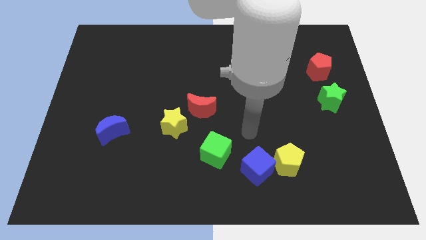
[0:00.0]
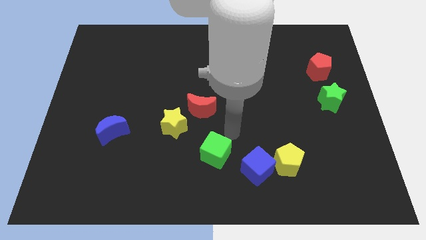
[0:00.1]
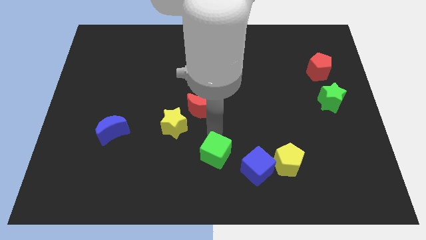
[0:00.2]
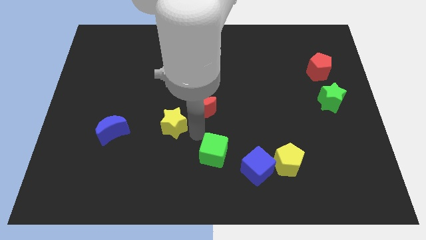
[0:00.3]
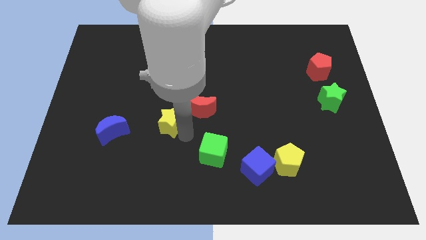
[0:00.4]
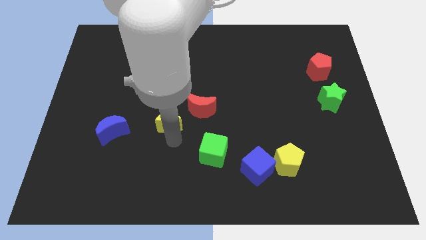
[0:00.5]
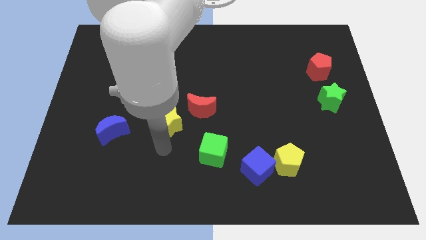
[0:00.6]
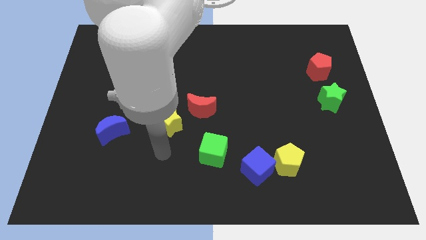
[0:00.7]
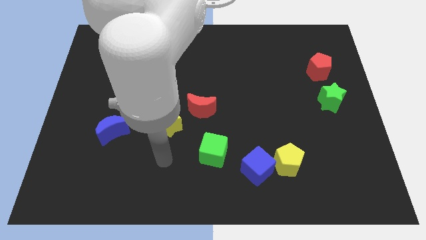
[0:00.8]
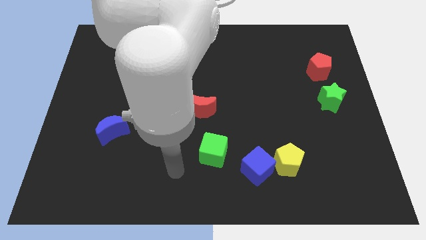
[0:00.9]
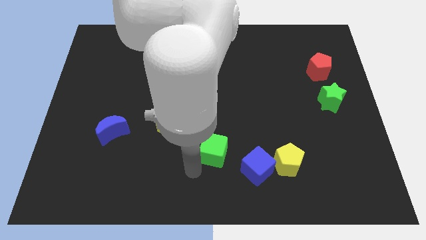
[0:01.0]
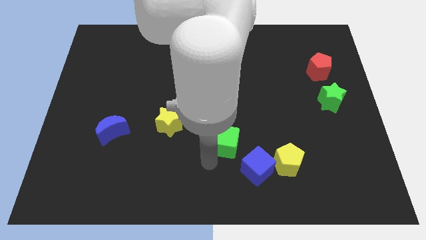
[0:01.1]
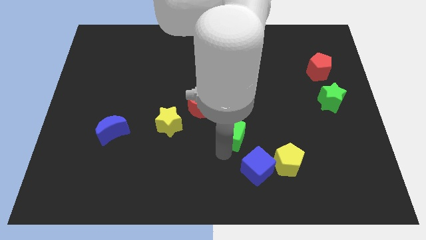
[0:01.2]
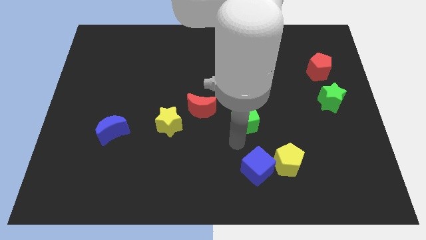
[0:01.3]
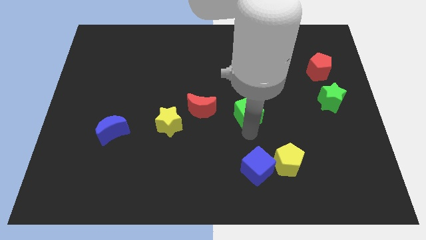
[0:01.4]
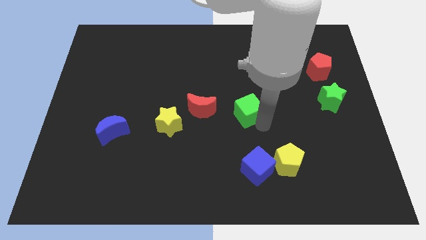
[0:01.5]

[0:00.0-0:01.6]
place the green cube to the right of the red moon

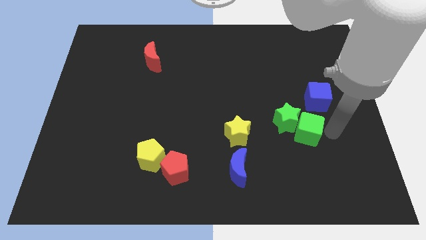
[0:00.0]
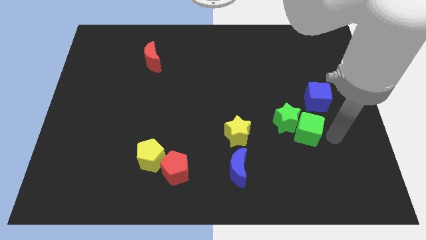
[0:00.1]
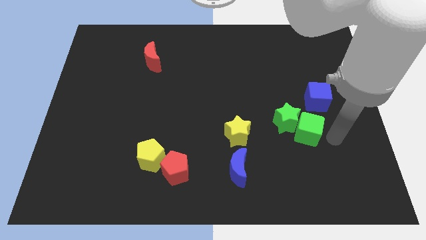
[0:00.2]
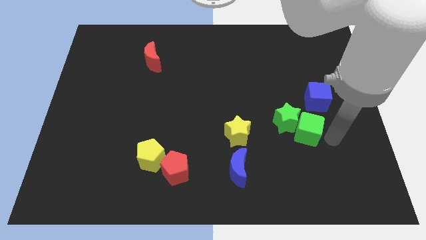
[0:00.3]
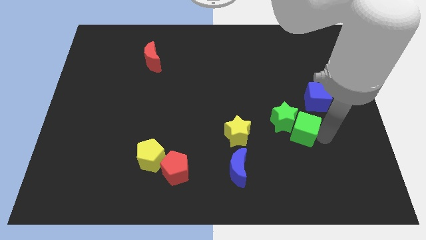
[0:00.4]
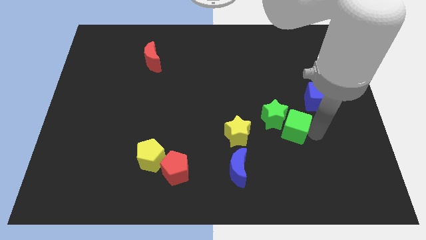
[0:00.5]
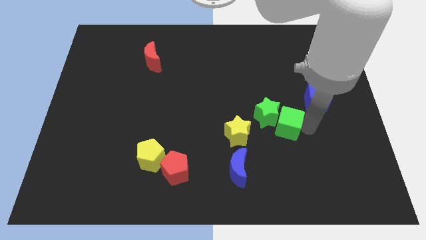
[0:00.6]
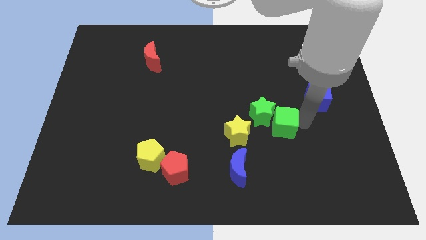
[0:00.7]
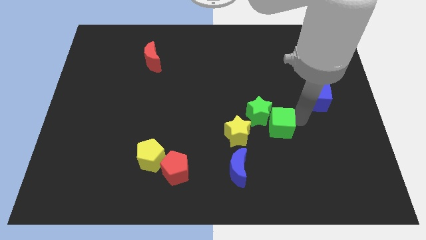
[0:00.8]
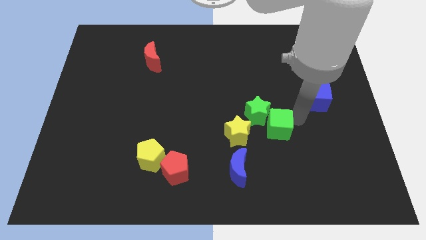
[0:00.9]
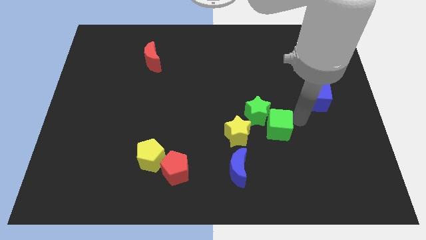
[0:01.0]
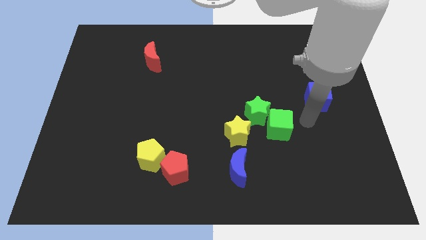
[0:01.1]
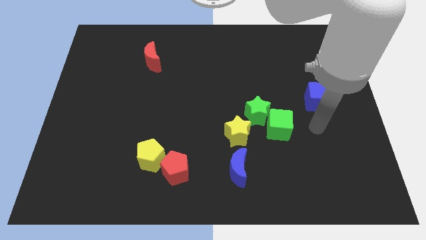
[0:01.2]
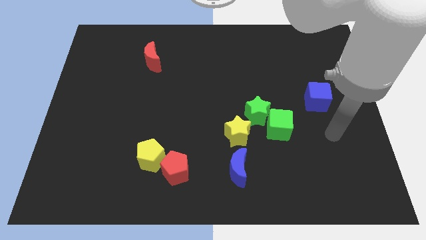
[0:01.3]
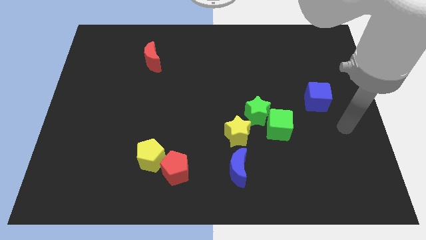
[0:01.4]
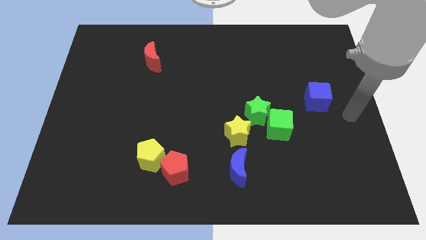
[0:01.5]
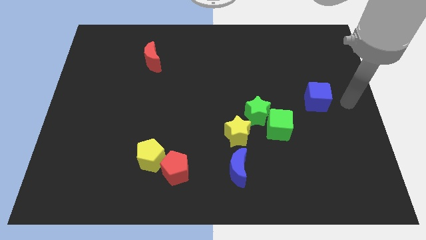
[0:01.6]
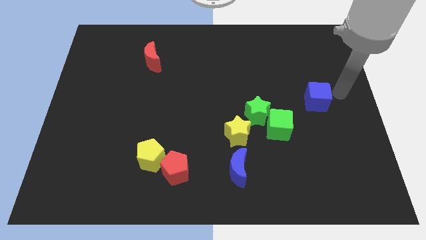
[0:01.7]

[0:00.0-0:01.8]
point your arm at the right side of the blue cube

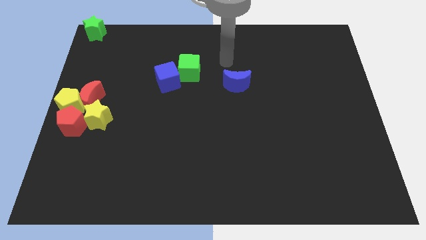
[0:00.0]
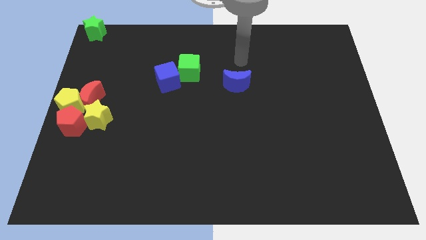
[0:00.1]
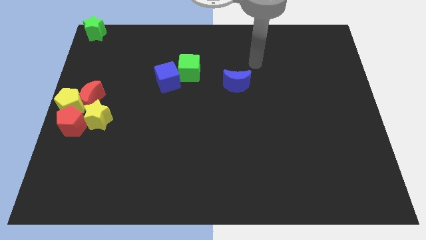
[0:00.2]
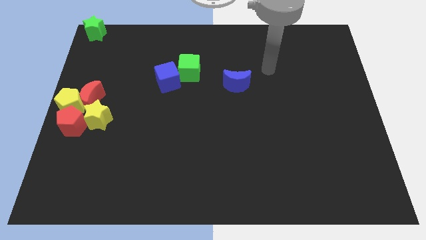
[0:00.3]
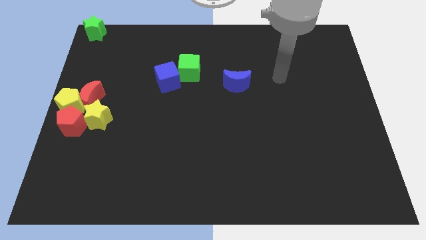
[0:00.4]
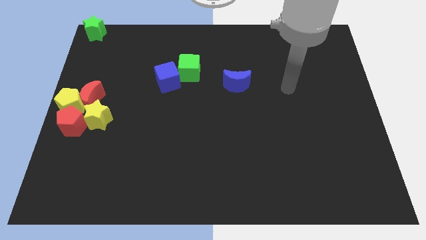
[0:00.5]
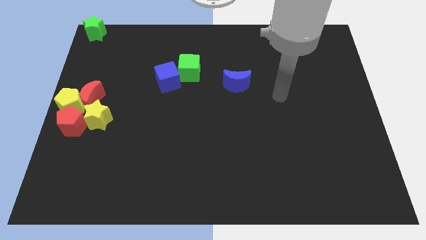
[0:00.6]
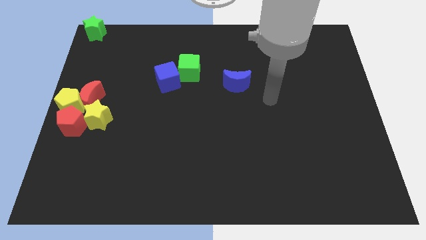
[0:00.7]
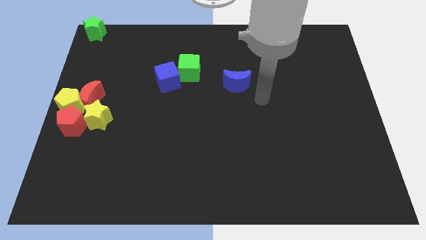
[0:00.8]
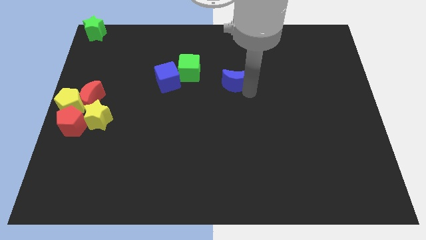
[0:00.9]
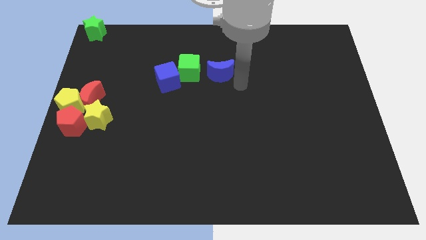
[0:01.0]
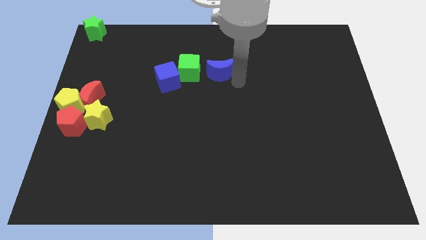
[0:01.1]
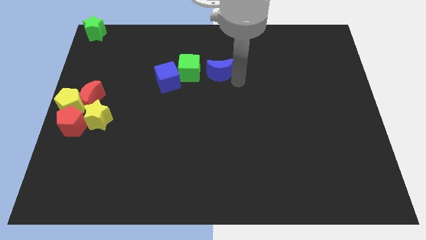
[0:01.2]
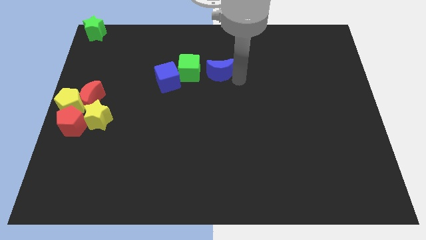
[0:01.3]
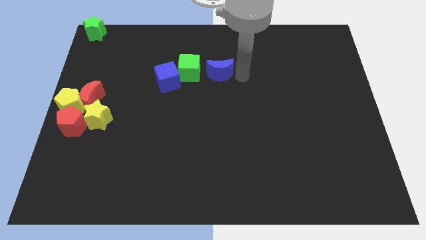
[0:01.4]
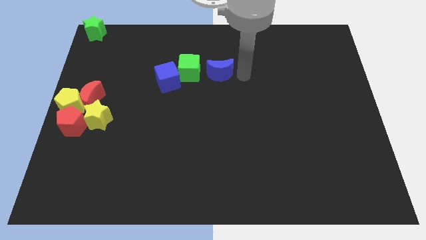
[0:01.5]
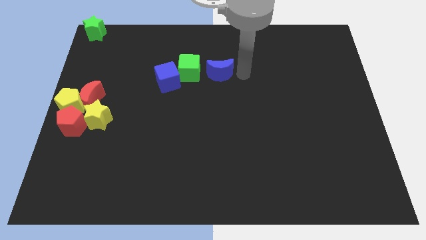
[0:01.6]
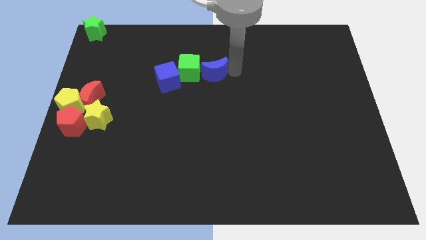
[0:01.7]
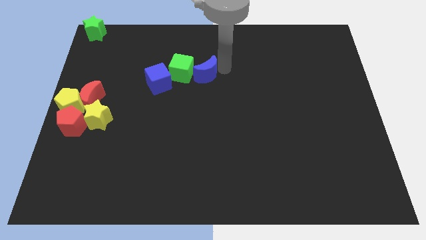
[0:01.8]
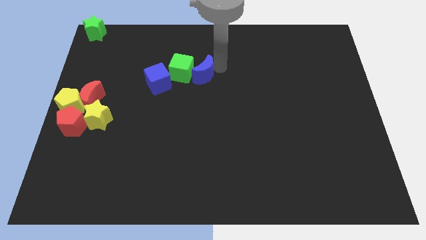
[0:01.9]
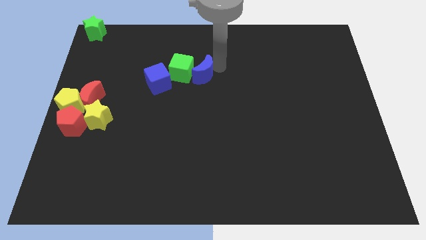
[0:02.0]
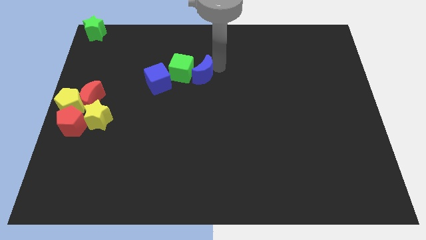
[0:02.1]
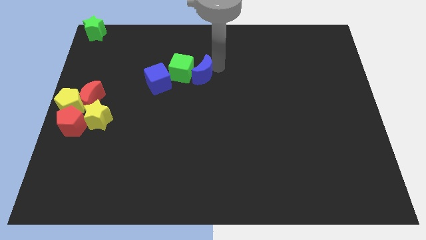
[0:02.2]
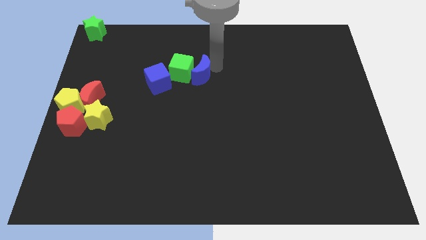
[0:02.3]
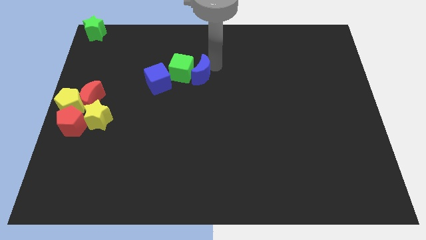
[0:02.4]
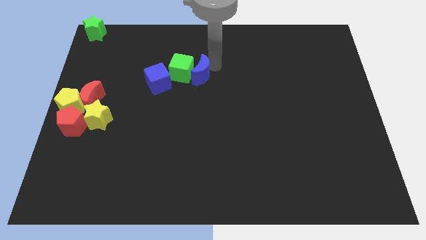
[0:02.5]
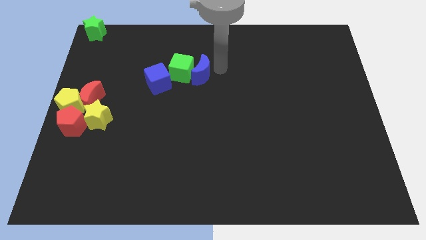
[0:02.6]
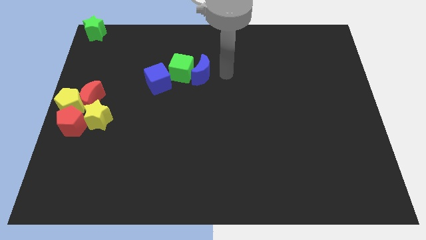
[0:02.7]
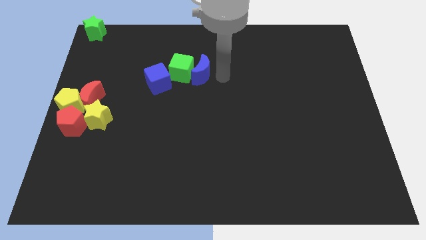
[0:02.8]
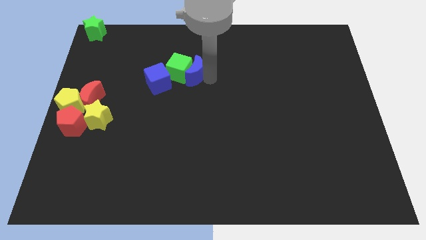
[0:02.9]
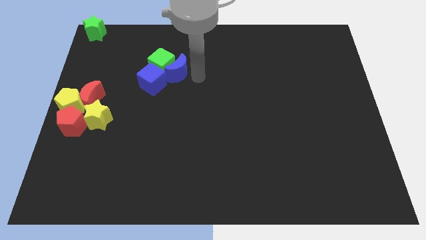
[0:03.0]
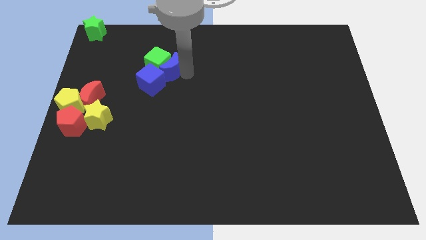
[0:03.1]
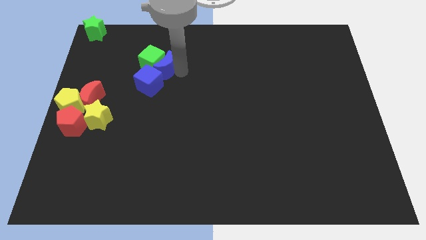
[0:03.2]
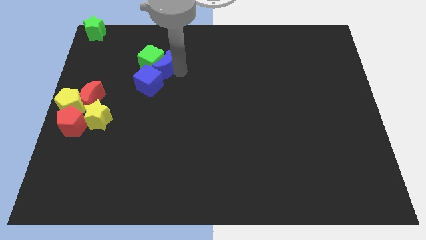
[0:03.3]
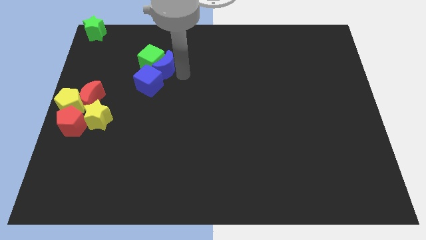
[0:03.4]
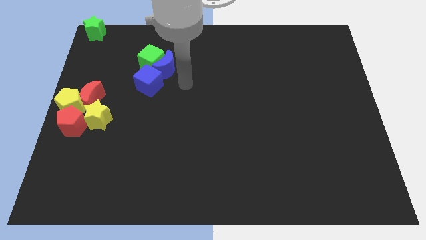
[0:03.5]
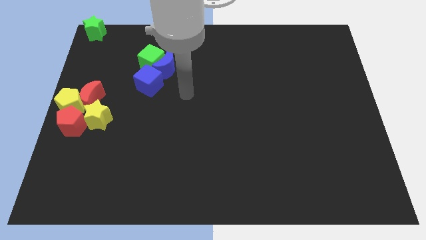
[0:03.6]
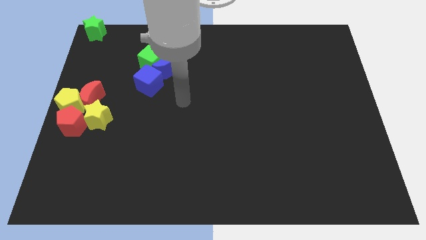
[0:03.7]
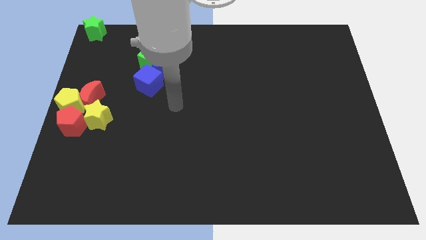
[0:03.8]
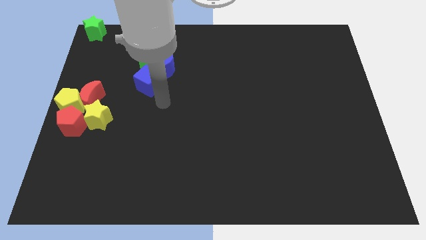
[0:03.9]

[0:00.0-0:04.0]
place blue moon to the top right of the blue cube

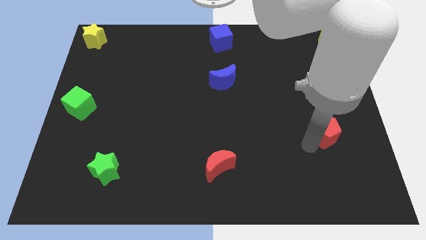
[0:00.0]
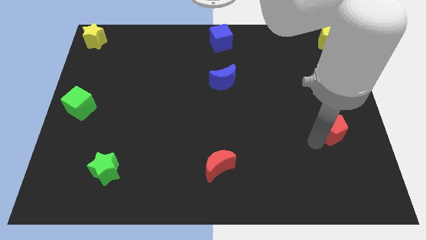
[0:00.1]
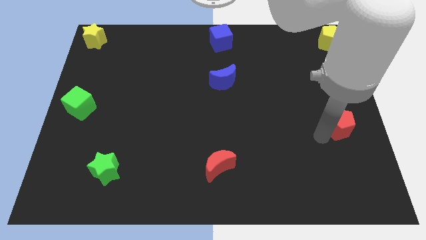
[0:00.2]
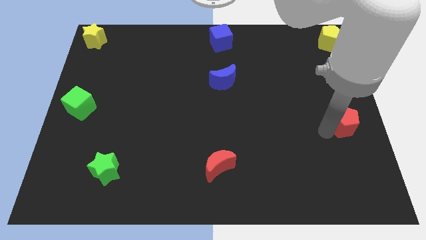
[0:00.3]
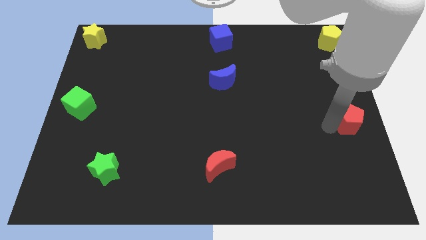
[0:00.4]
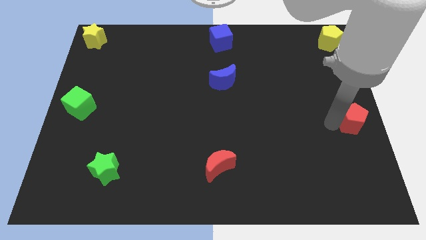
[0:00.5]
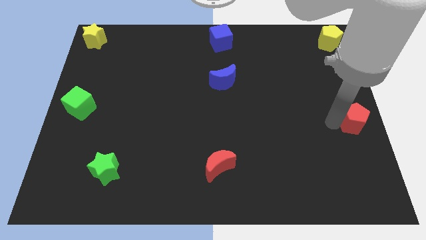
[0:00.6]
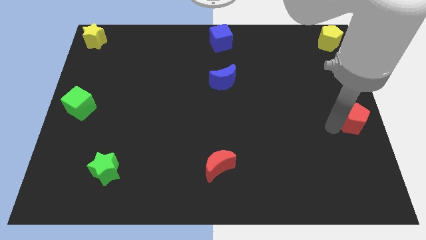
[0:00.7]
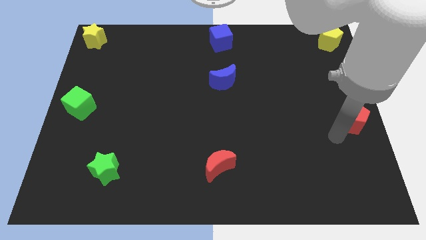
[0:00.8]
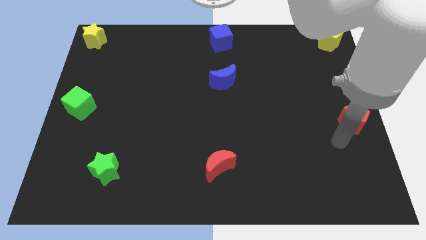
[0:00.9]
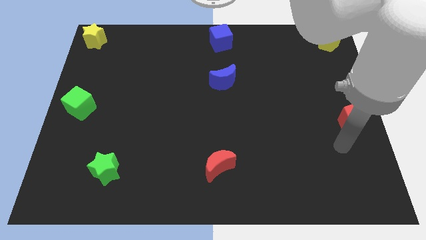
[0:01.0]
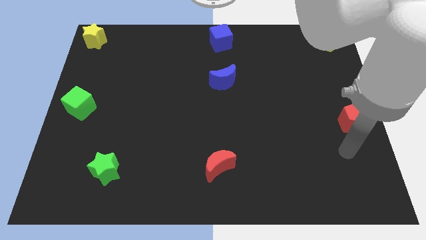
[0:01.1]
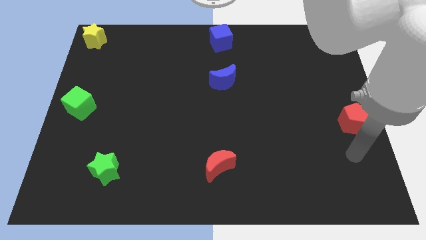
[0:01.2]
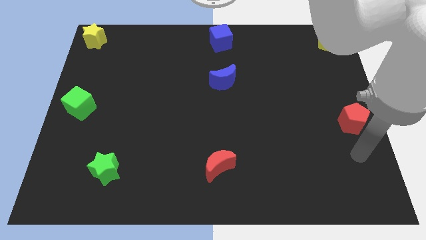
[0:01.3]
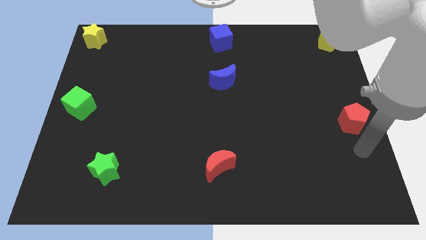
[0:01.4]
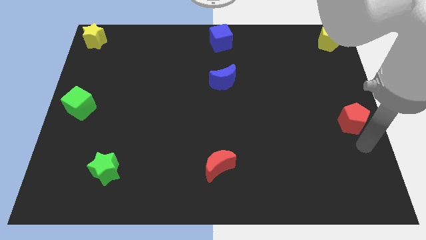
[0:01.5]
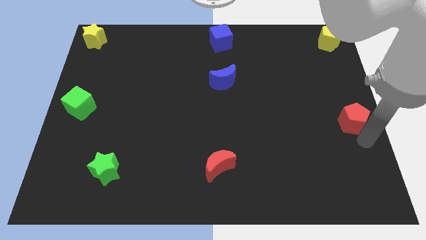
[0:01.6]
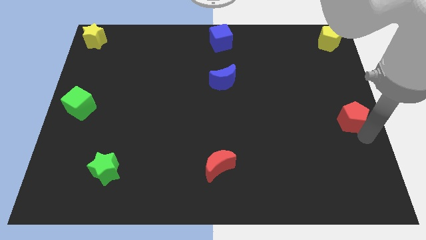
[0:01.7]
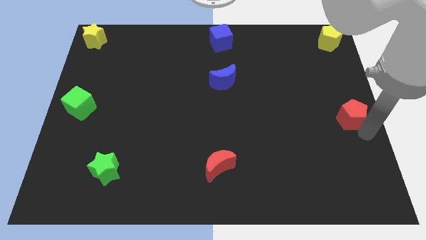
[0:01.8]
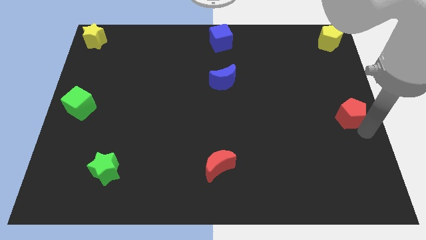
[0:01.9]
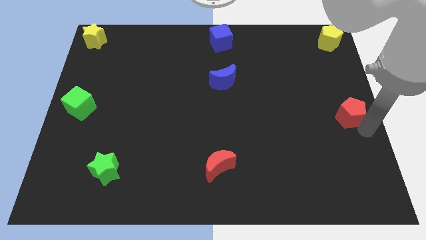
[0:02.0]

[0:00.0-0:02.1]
move the red pentagon to the center right side of the board
